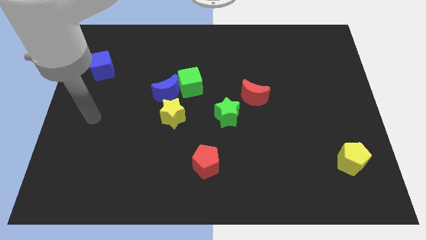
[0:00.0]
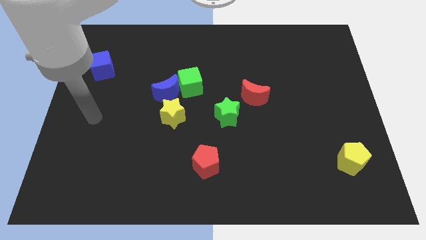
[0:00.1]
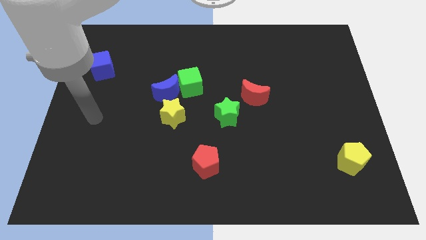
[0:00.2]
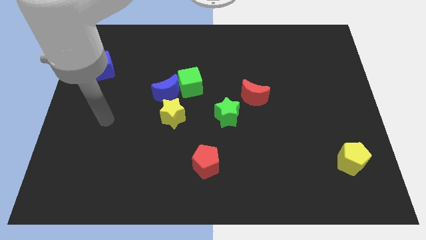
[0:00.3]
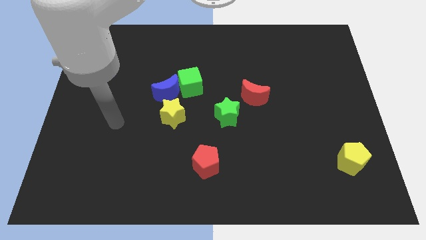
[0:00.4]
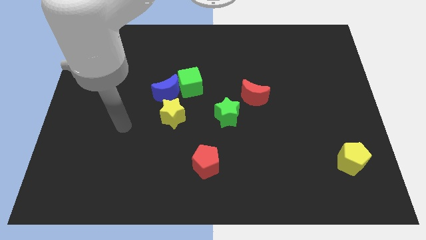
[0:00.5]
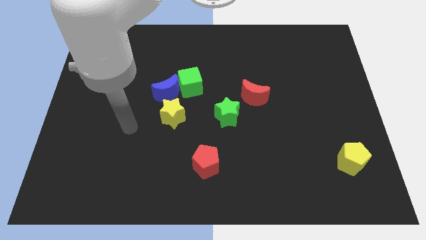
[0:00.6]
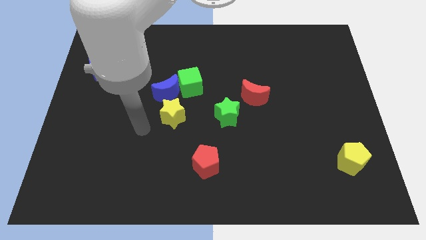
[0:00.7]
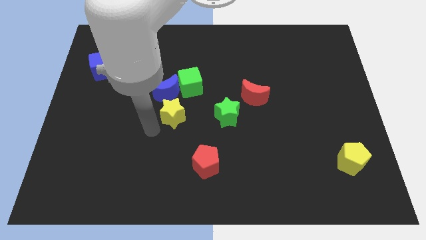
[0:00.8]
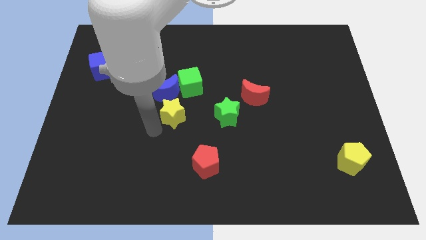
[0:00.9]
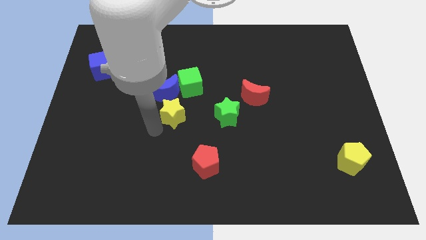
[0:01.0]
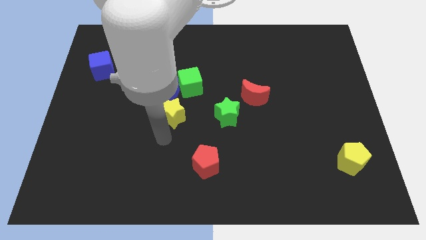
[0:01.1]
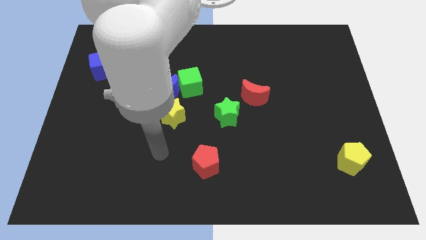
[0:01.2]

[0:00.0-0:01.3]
move the arm below the yellow star

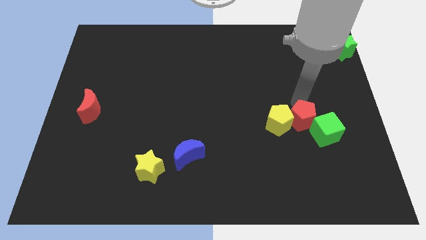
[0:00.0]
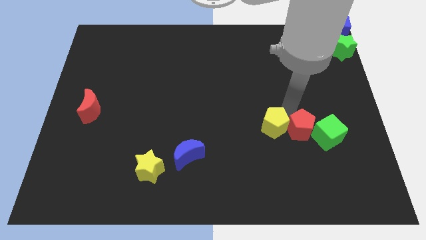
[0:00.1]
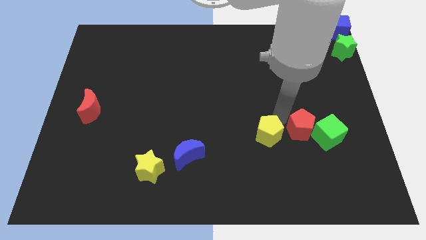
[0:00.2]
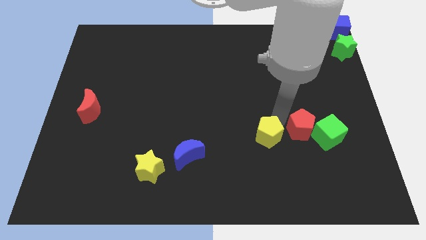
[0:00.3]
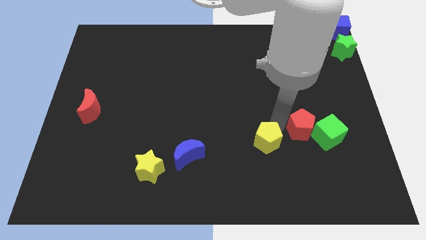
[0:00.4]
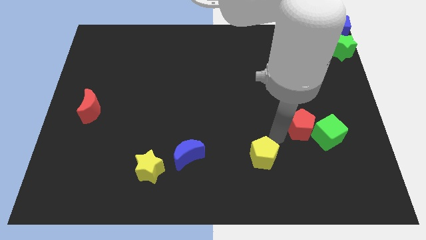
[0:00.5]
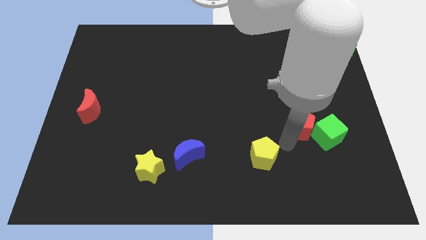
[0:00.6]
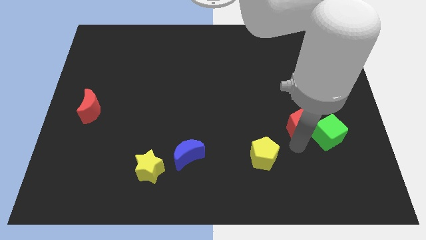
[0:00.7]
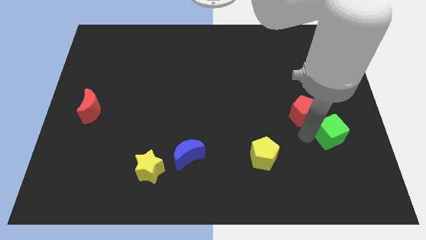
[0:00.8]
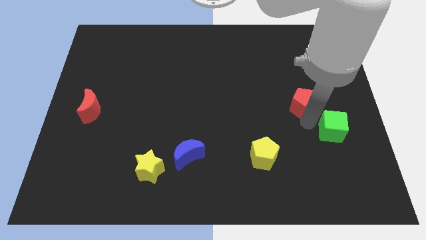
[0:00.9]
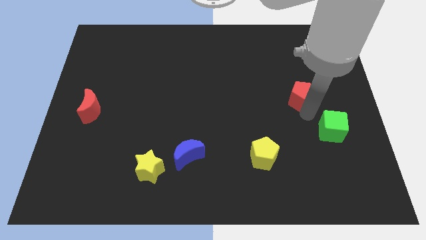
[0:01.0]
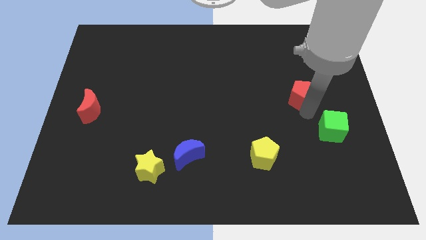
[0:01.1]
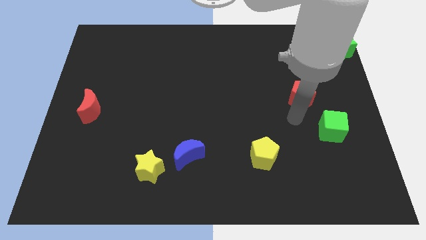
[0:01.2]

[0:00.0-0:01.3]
drag the yellow pentagon away from the red pentagon

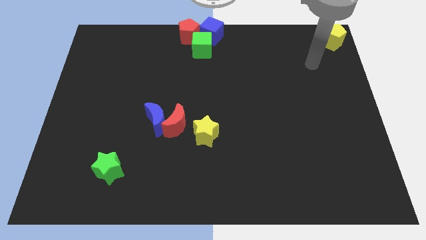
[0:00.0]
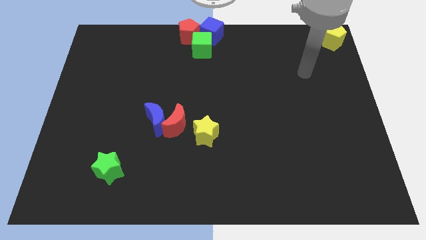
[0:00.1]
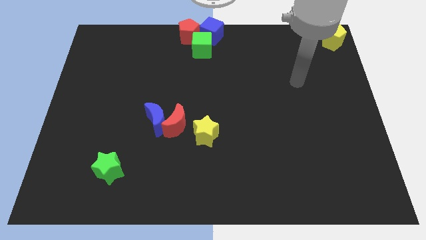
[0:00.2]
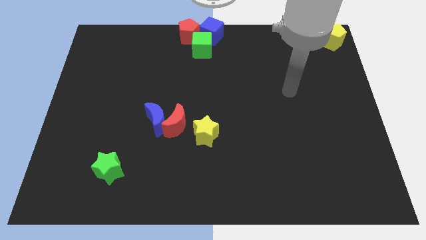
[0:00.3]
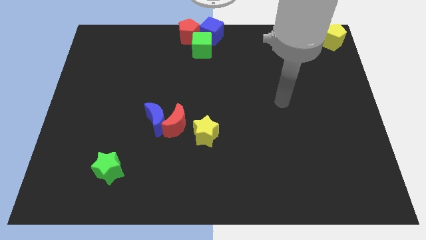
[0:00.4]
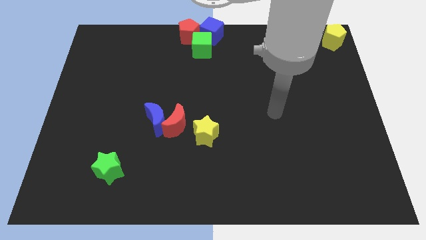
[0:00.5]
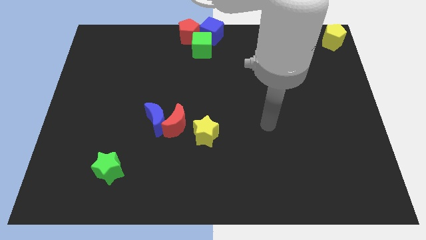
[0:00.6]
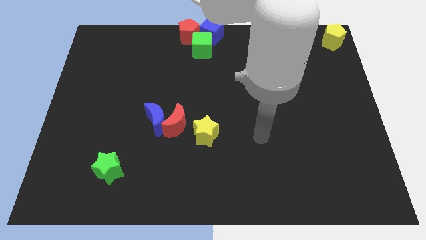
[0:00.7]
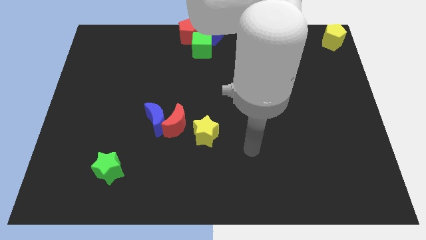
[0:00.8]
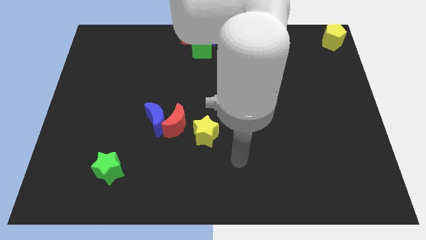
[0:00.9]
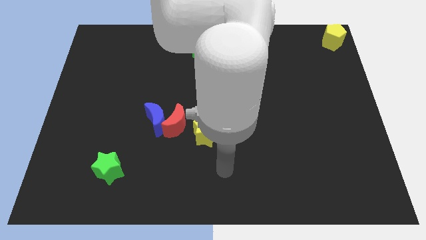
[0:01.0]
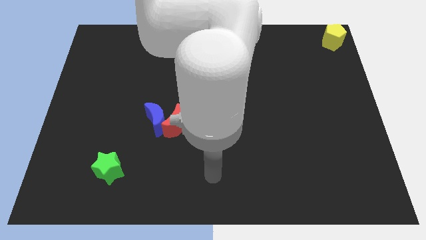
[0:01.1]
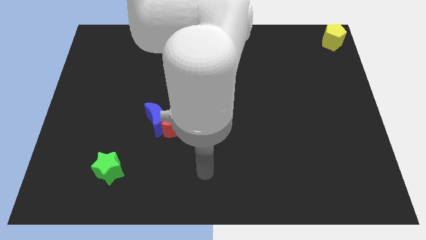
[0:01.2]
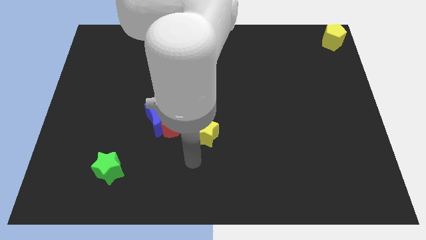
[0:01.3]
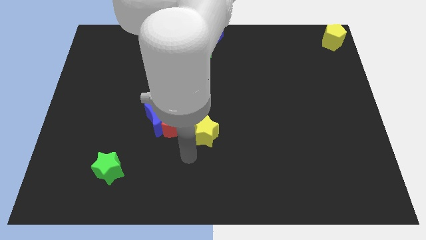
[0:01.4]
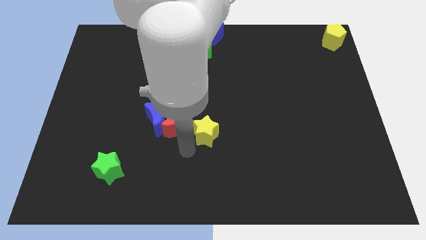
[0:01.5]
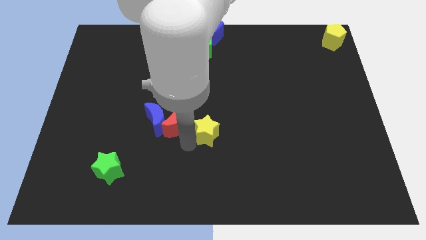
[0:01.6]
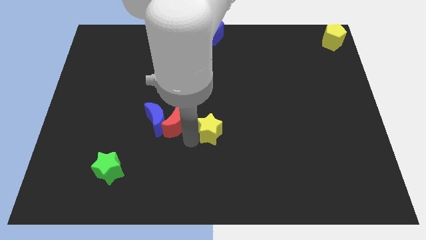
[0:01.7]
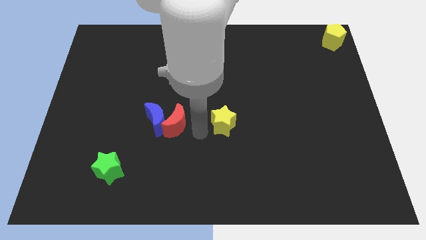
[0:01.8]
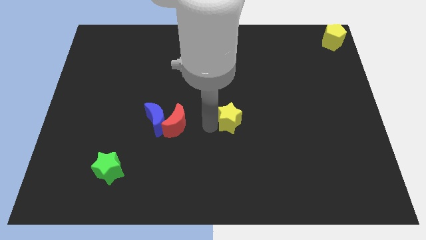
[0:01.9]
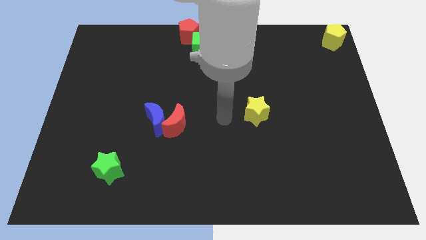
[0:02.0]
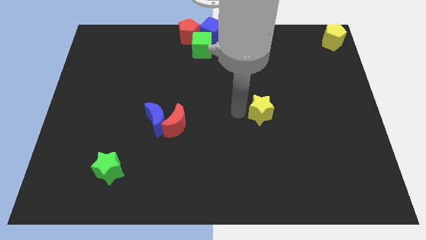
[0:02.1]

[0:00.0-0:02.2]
place yellow star diagonal left to yellow pentagon

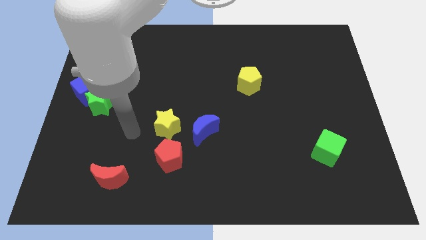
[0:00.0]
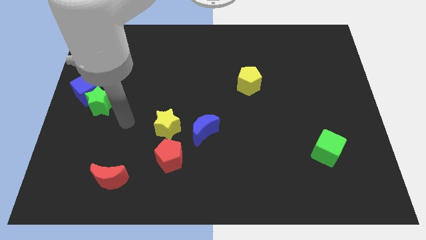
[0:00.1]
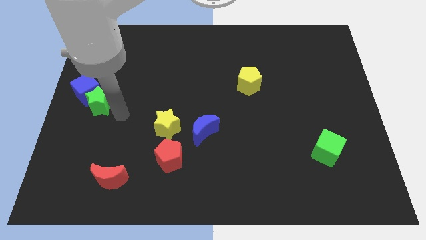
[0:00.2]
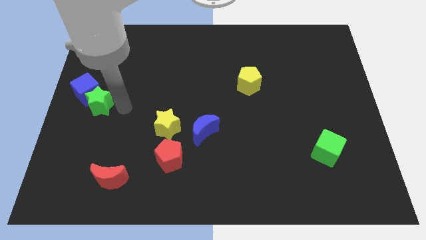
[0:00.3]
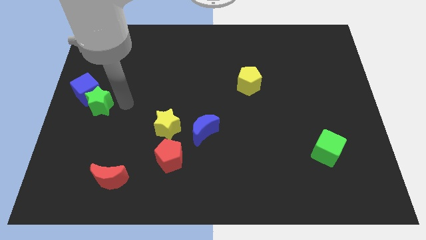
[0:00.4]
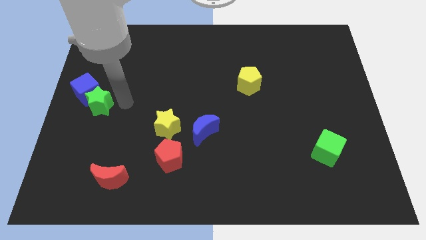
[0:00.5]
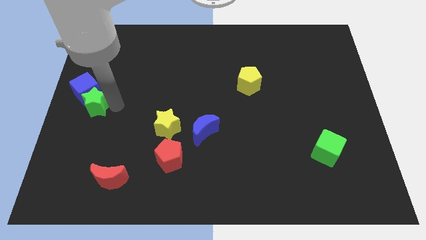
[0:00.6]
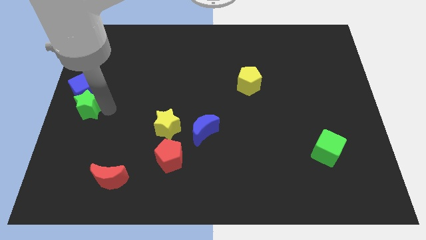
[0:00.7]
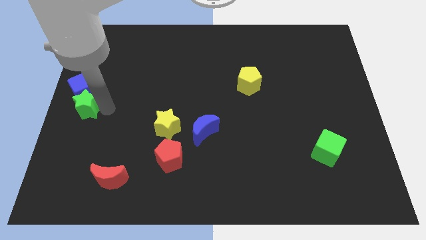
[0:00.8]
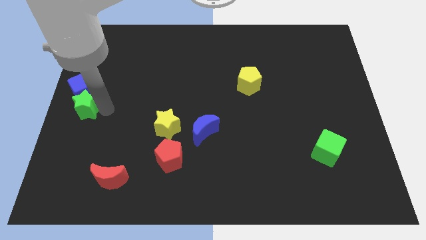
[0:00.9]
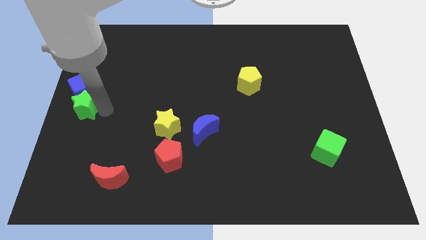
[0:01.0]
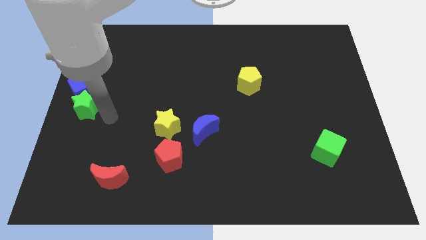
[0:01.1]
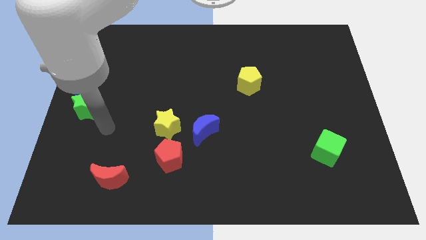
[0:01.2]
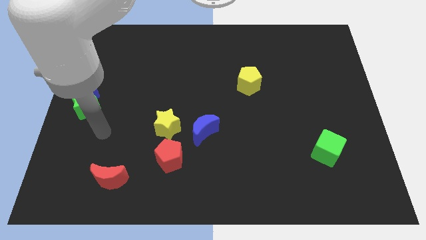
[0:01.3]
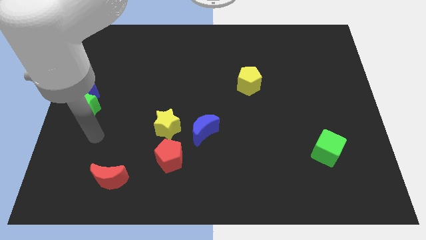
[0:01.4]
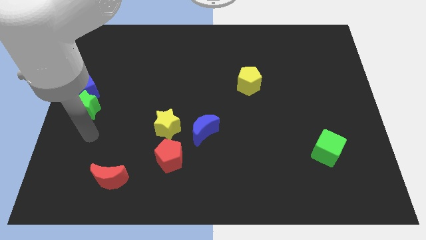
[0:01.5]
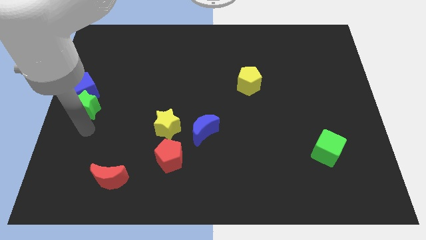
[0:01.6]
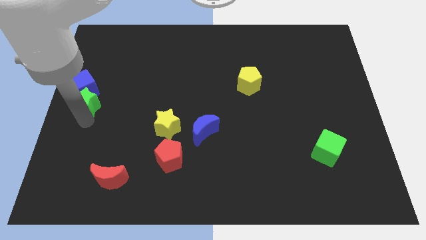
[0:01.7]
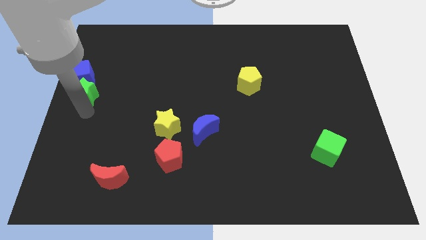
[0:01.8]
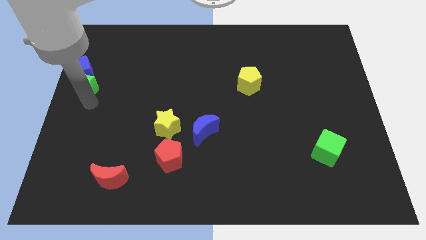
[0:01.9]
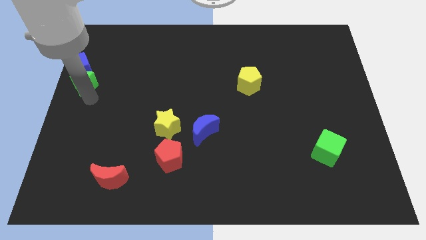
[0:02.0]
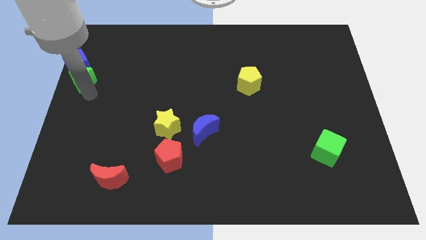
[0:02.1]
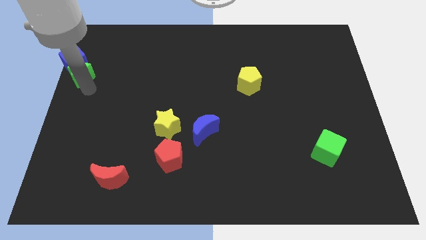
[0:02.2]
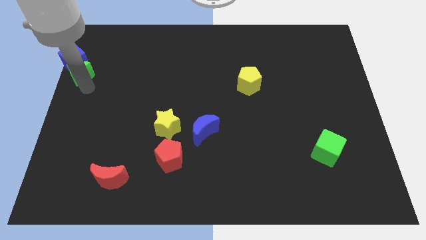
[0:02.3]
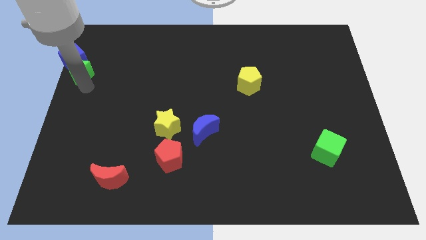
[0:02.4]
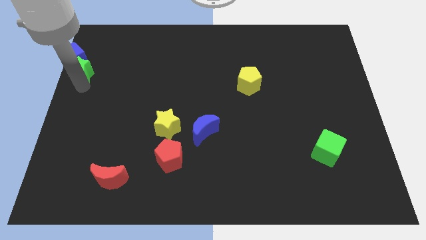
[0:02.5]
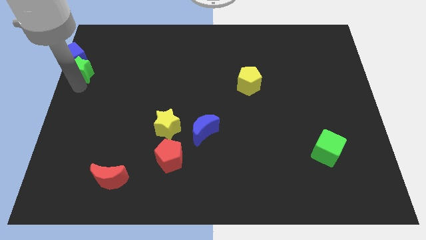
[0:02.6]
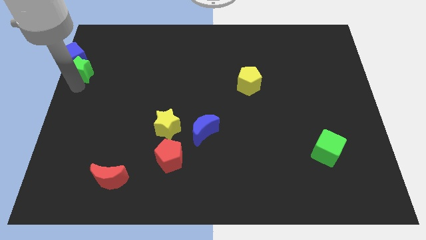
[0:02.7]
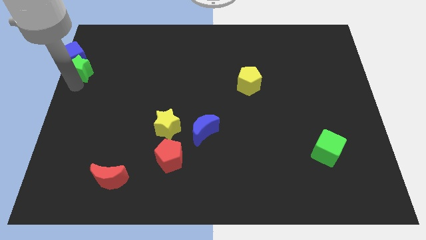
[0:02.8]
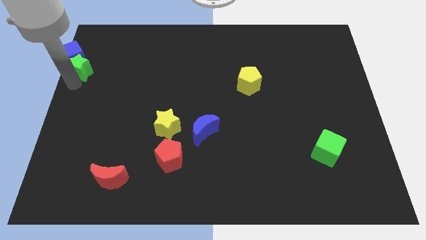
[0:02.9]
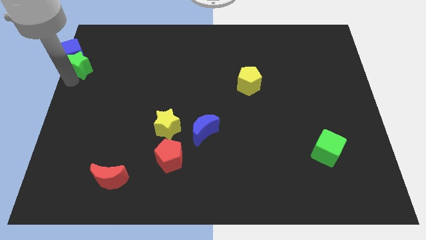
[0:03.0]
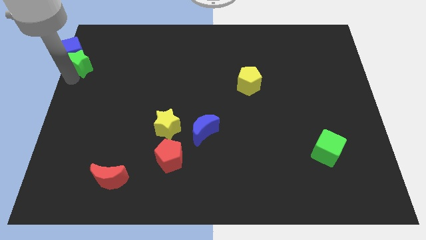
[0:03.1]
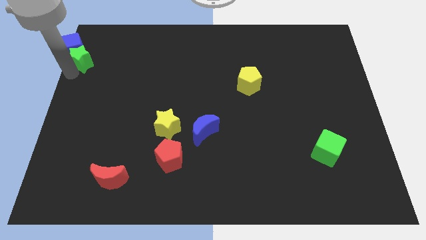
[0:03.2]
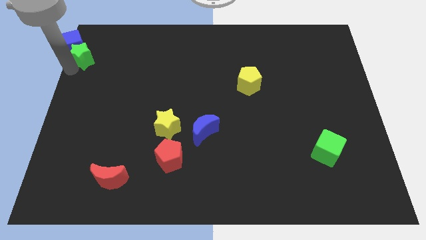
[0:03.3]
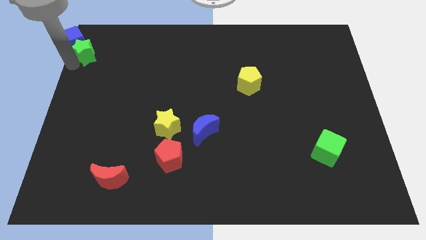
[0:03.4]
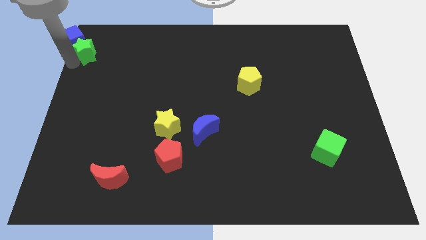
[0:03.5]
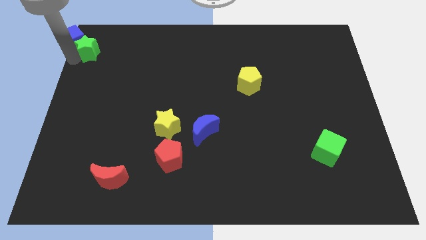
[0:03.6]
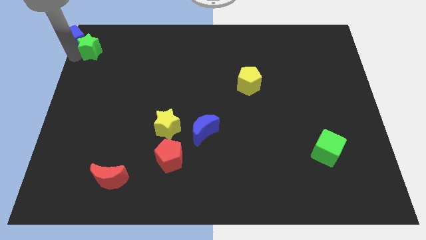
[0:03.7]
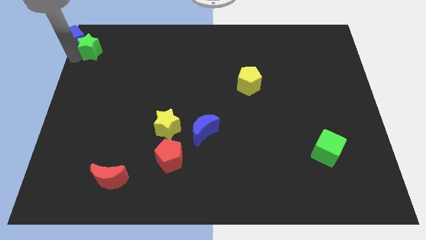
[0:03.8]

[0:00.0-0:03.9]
move the green star into the blue cube

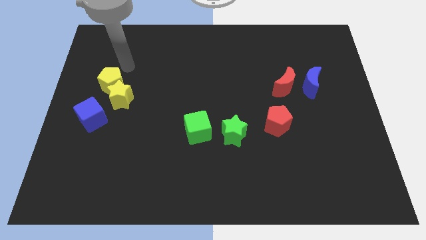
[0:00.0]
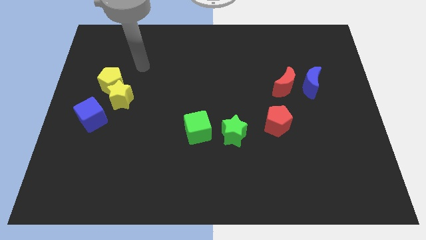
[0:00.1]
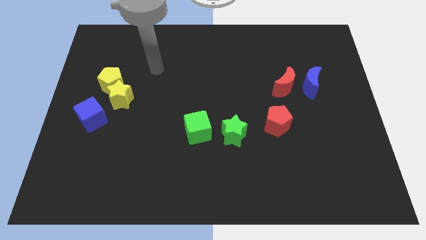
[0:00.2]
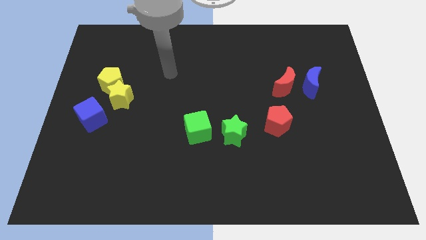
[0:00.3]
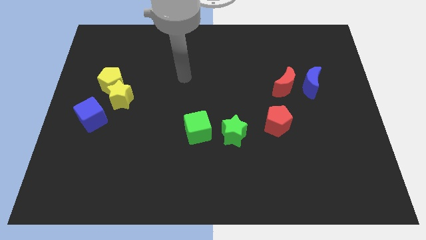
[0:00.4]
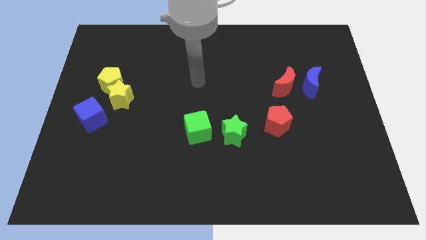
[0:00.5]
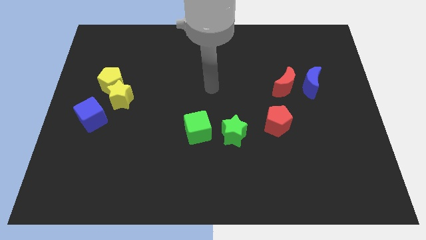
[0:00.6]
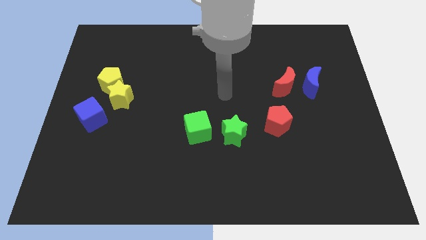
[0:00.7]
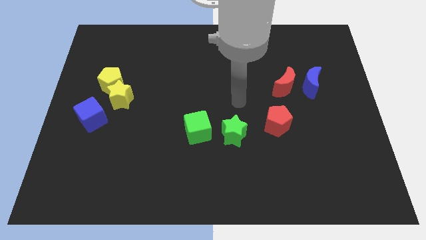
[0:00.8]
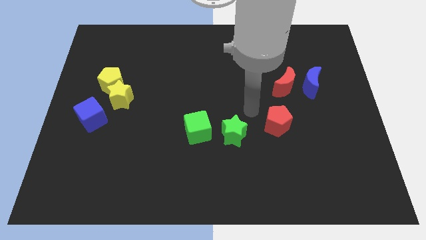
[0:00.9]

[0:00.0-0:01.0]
move away from the yellow pentagon
